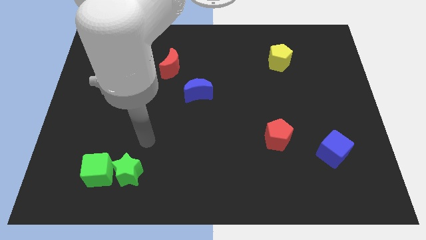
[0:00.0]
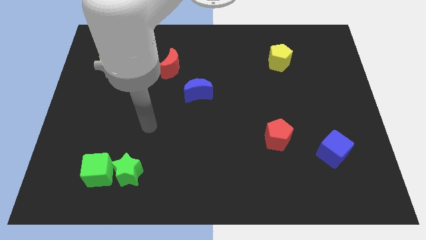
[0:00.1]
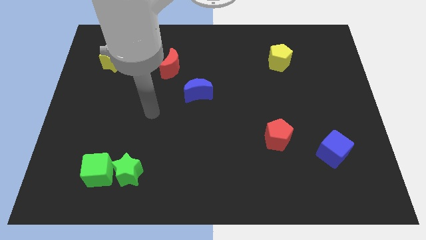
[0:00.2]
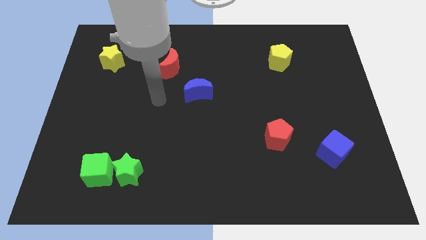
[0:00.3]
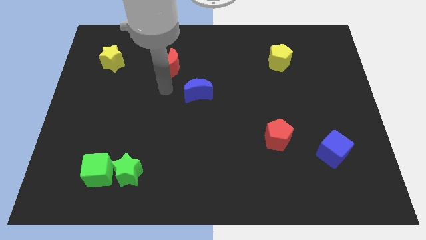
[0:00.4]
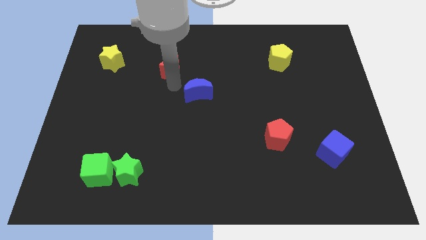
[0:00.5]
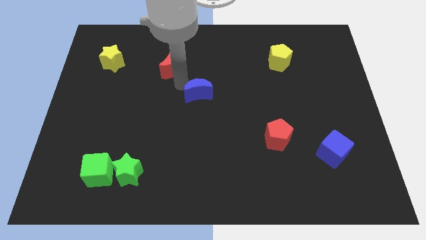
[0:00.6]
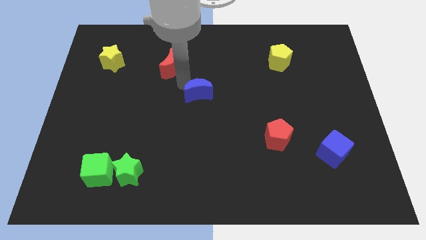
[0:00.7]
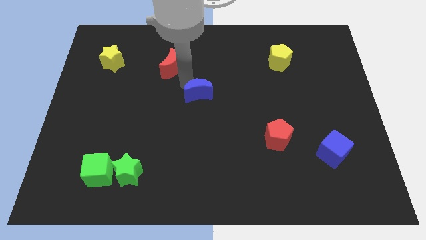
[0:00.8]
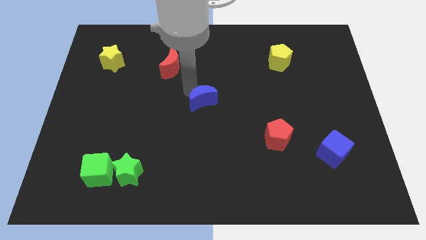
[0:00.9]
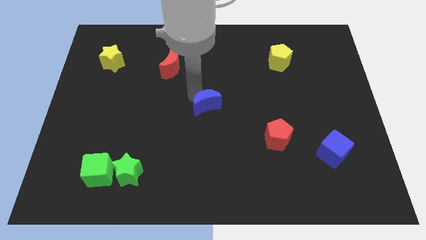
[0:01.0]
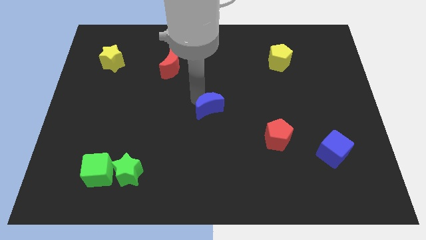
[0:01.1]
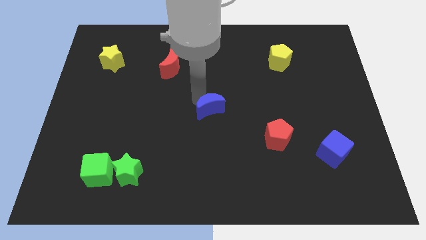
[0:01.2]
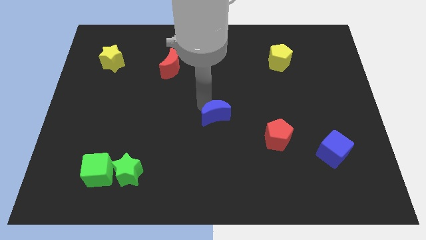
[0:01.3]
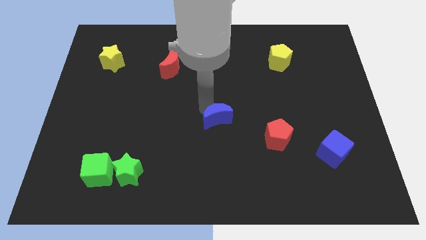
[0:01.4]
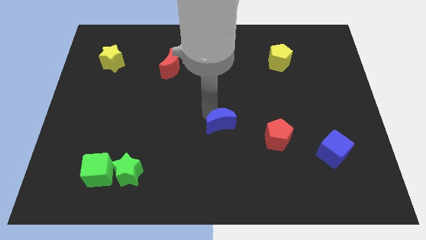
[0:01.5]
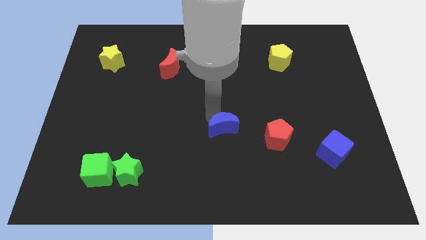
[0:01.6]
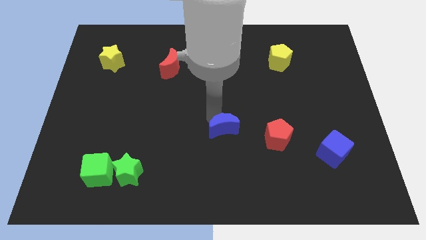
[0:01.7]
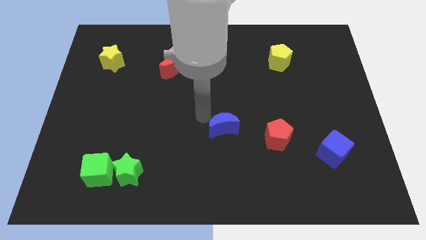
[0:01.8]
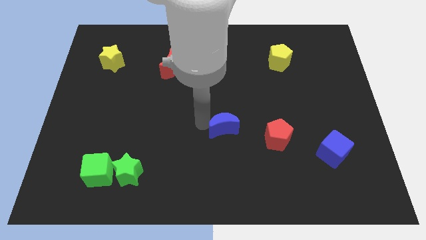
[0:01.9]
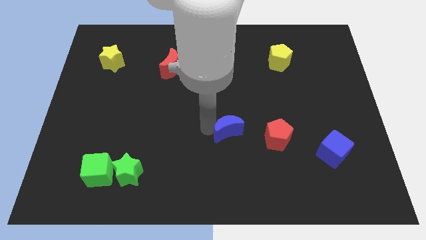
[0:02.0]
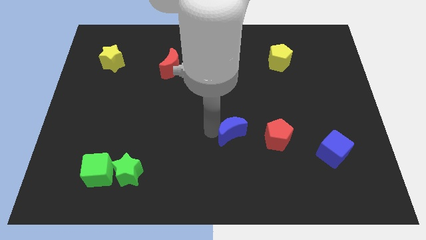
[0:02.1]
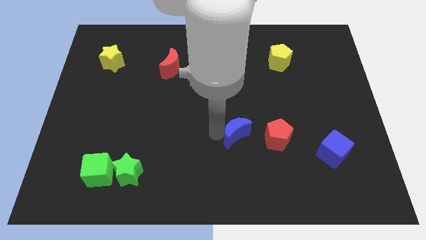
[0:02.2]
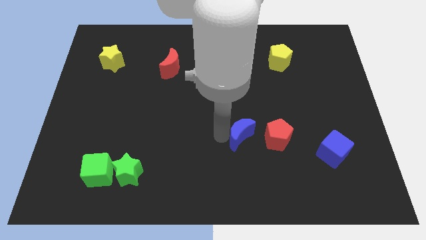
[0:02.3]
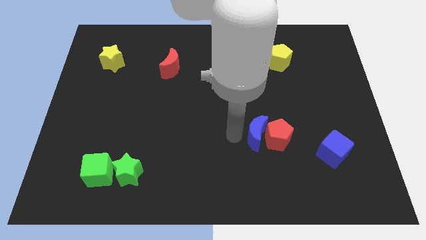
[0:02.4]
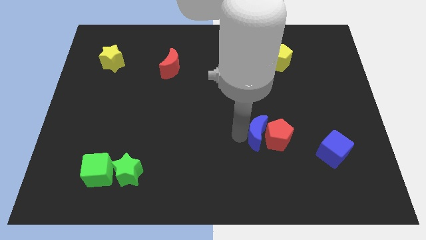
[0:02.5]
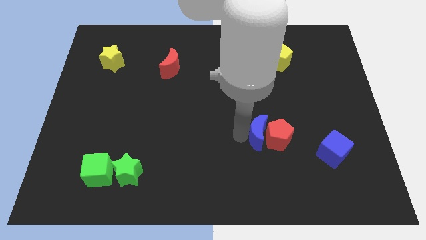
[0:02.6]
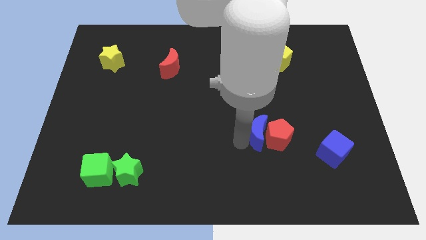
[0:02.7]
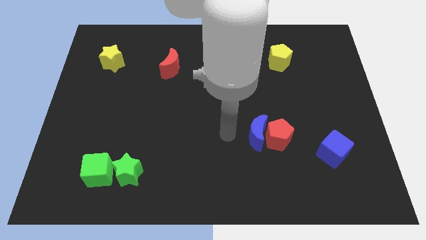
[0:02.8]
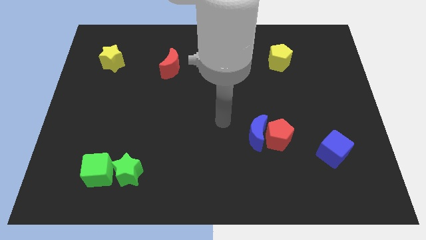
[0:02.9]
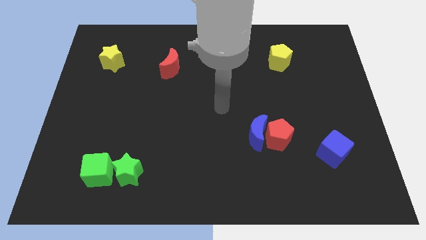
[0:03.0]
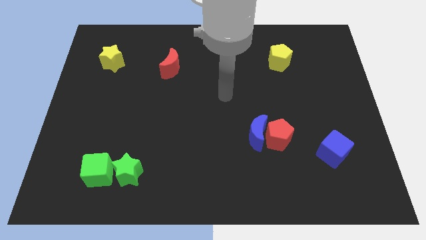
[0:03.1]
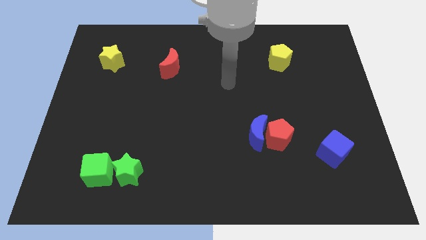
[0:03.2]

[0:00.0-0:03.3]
move the blue crescent to the left of the red pentagon

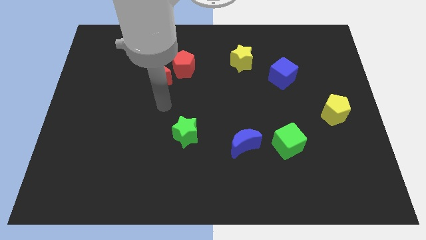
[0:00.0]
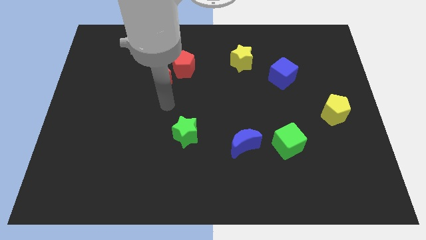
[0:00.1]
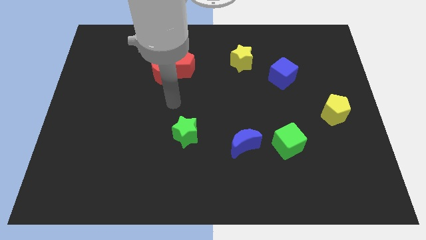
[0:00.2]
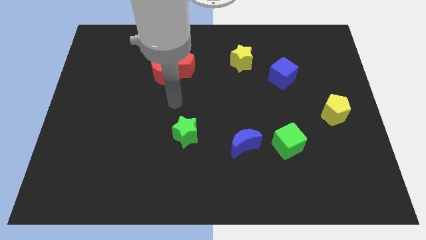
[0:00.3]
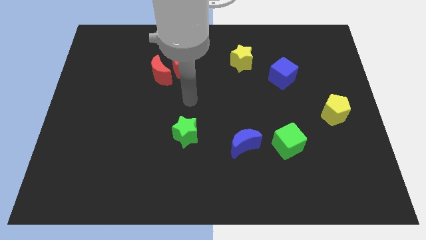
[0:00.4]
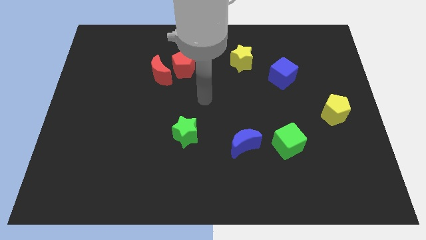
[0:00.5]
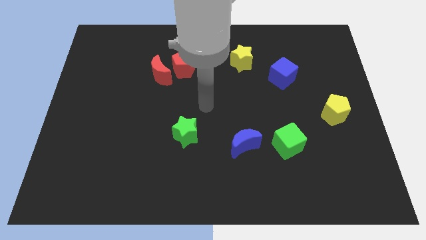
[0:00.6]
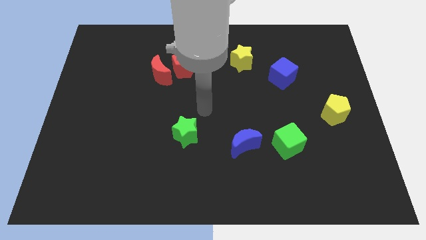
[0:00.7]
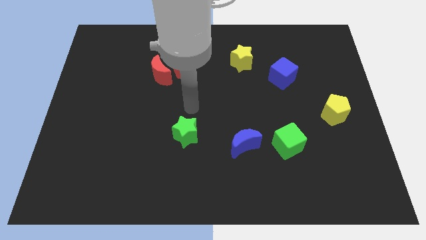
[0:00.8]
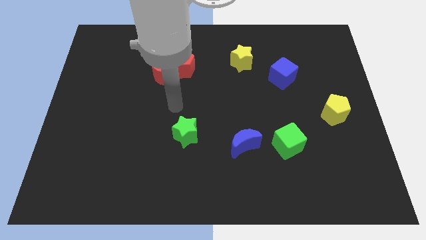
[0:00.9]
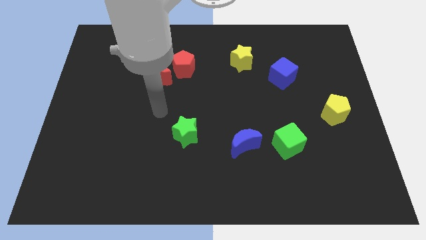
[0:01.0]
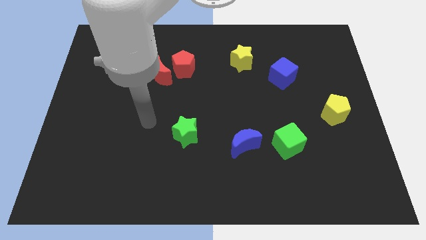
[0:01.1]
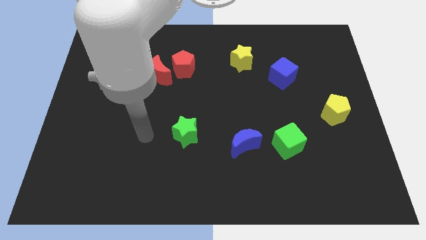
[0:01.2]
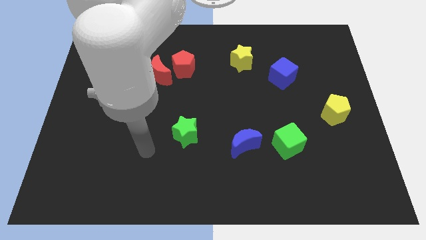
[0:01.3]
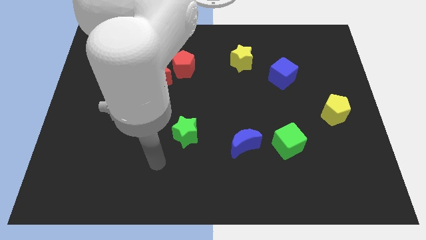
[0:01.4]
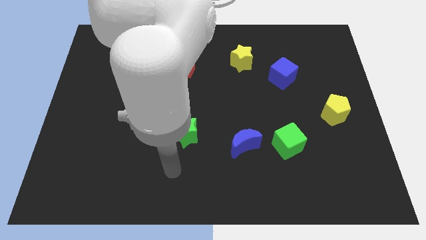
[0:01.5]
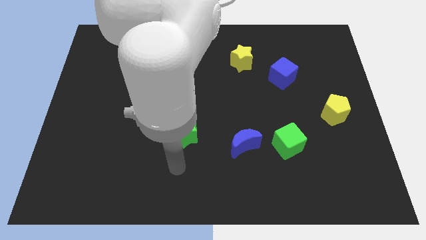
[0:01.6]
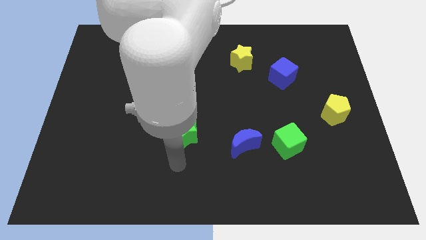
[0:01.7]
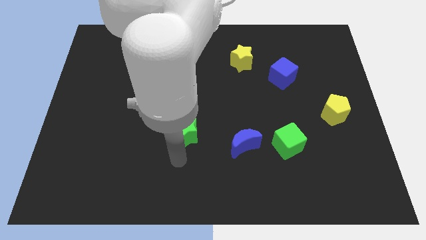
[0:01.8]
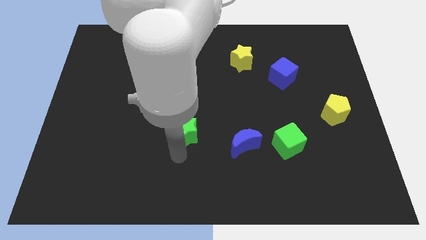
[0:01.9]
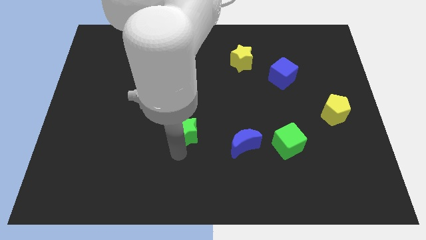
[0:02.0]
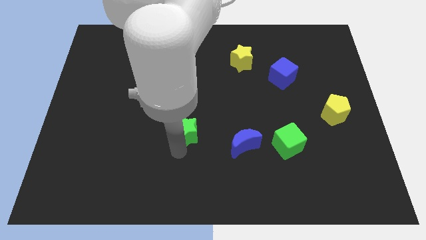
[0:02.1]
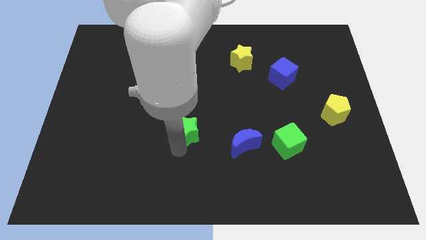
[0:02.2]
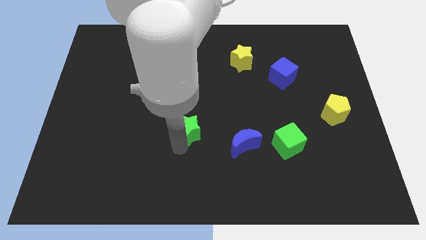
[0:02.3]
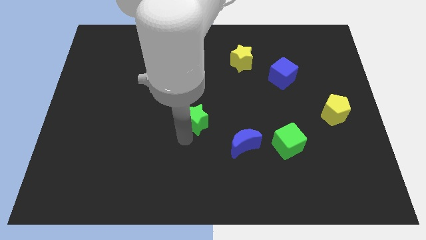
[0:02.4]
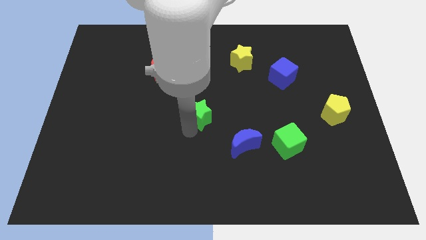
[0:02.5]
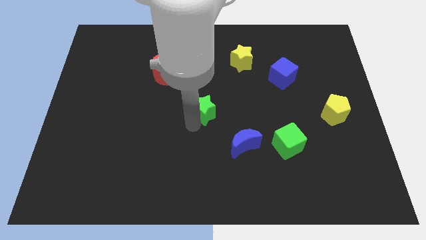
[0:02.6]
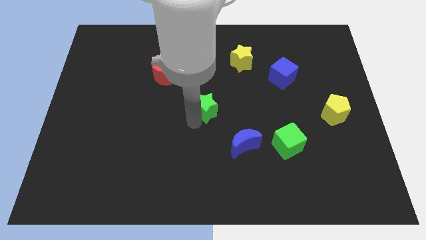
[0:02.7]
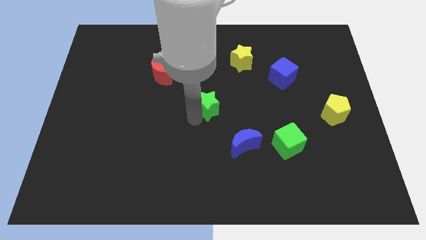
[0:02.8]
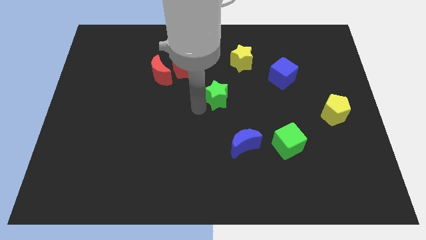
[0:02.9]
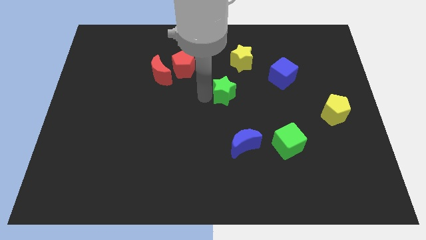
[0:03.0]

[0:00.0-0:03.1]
place the green star at the center of the board

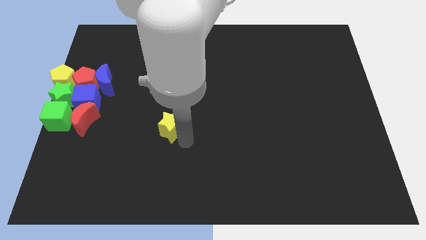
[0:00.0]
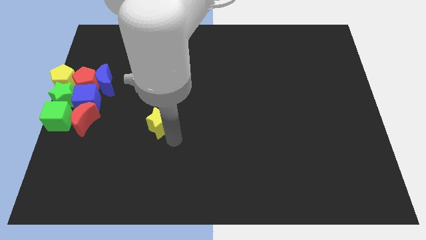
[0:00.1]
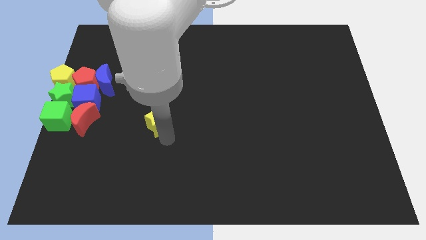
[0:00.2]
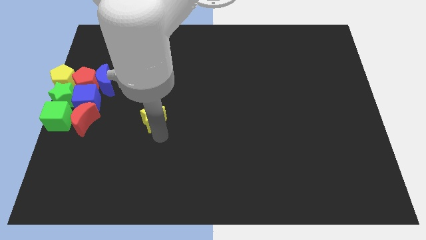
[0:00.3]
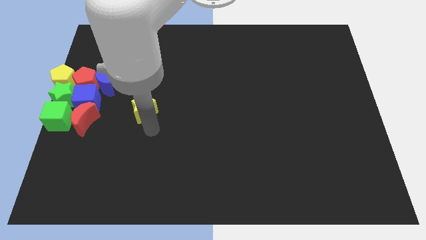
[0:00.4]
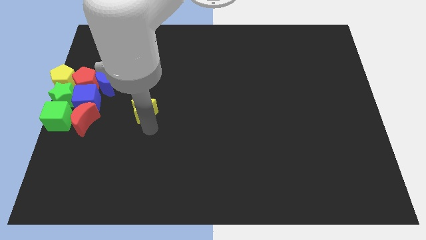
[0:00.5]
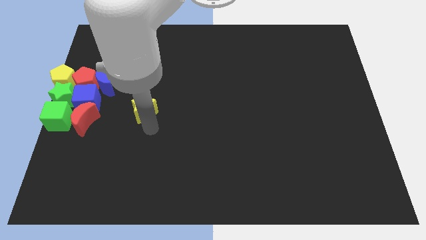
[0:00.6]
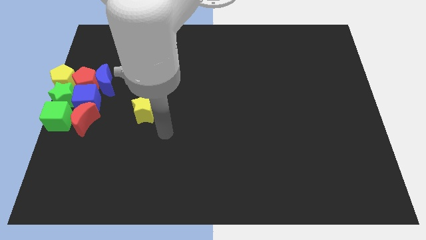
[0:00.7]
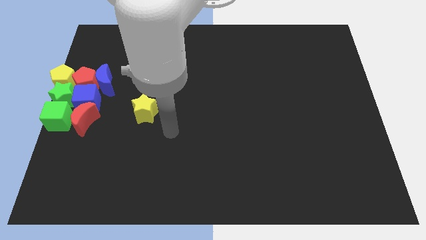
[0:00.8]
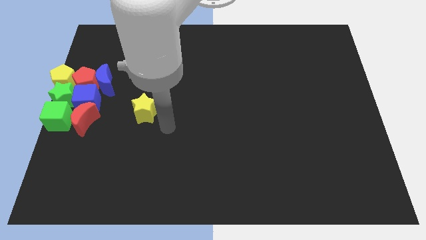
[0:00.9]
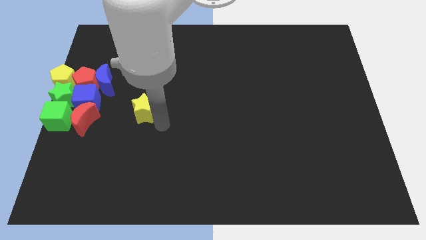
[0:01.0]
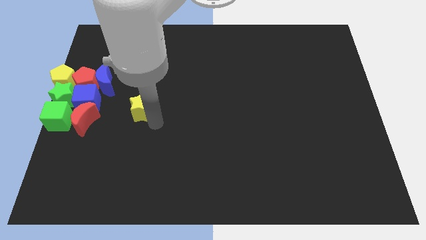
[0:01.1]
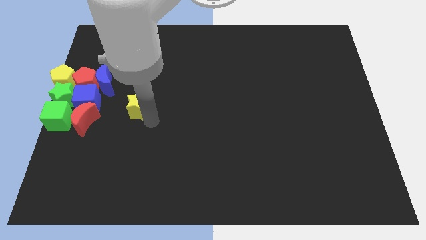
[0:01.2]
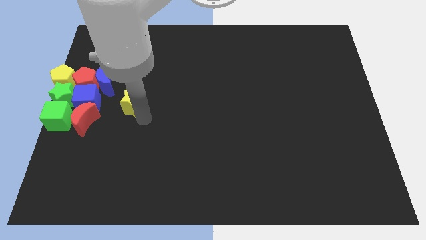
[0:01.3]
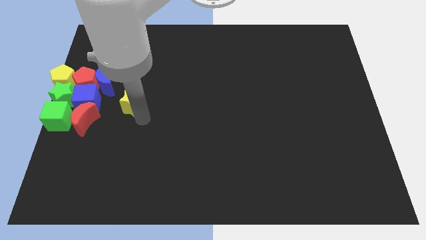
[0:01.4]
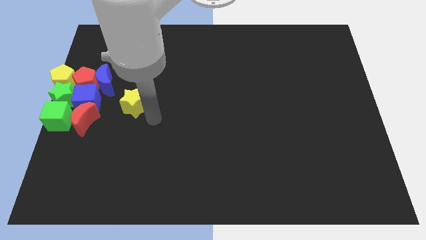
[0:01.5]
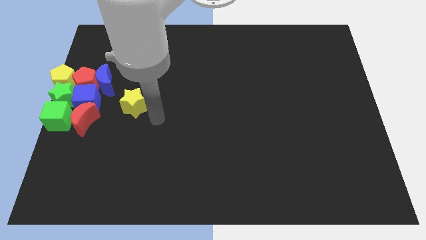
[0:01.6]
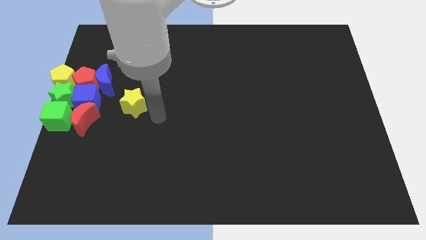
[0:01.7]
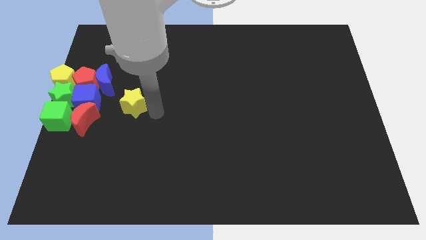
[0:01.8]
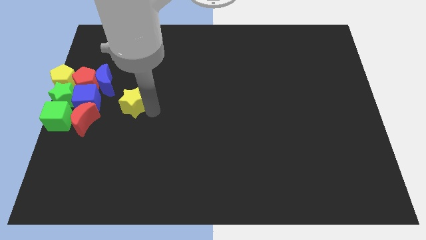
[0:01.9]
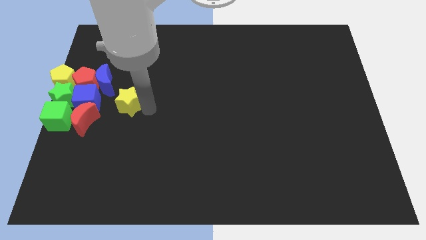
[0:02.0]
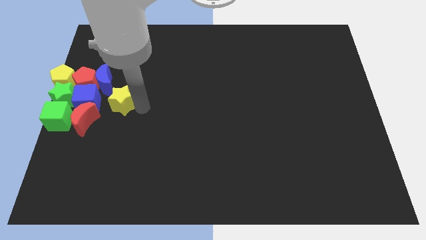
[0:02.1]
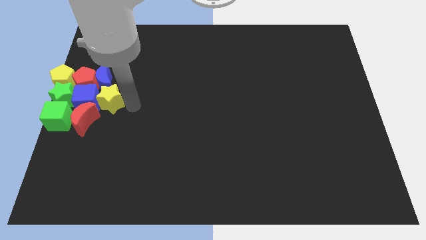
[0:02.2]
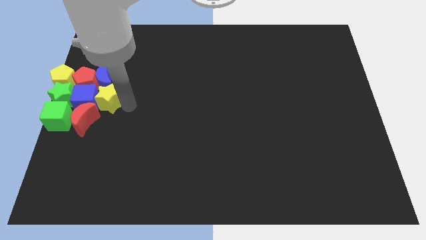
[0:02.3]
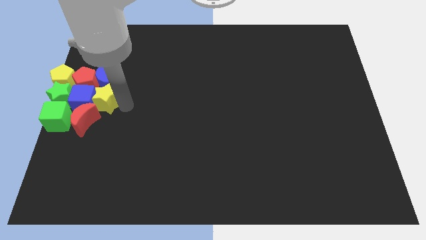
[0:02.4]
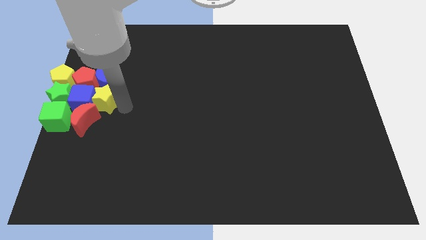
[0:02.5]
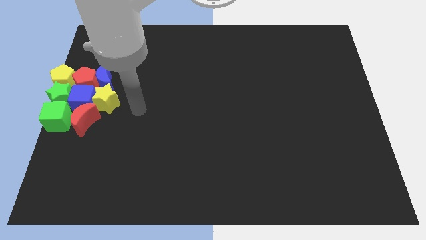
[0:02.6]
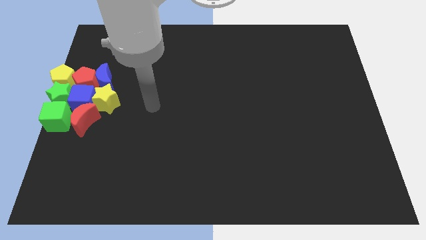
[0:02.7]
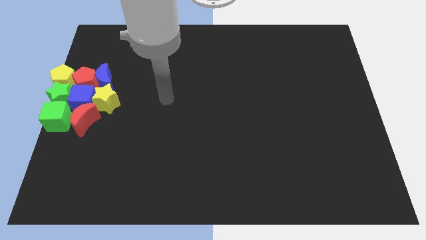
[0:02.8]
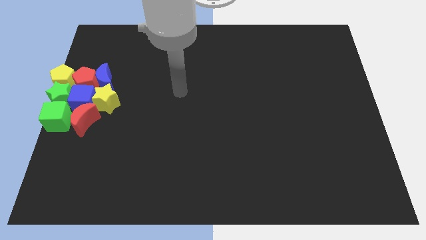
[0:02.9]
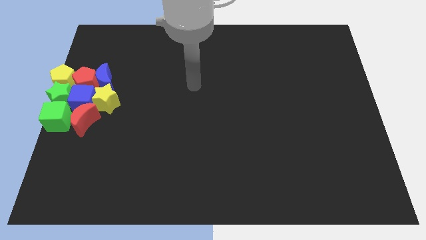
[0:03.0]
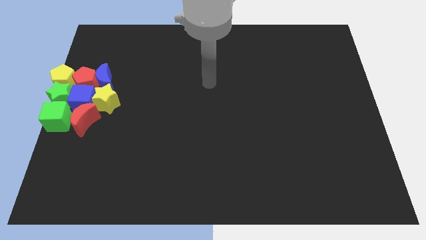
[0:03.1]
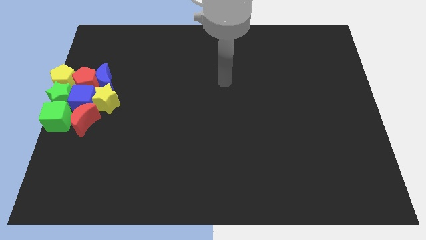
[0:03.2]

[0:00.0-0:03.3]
move the yellow star into the group of blocks
